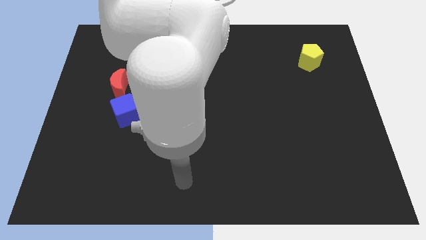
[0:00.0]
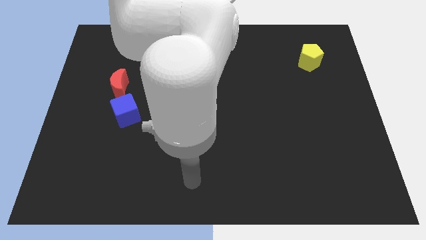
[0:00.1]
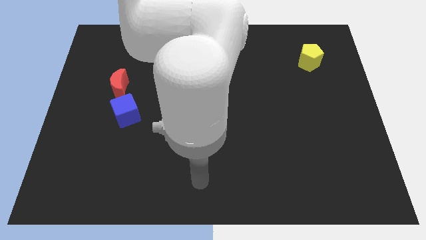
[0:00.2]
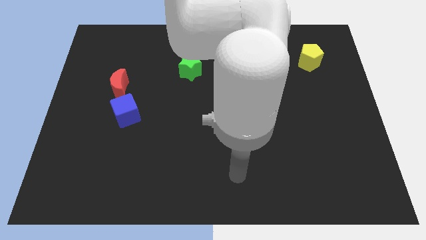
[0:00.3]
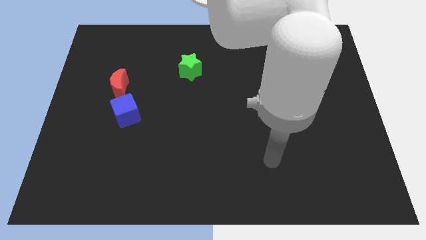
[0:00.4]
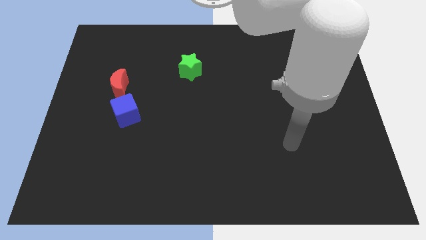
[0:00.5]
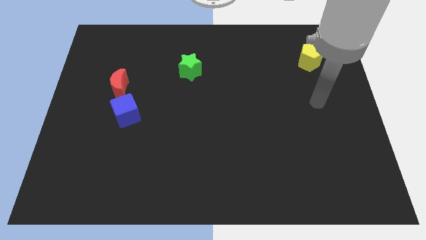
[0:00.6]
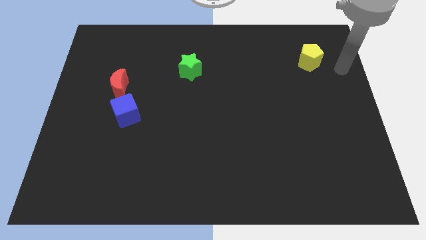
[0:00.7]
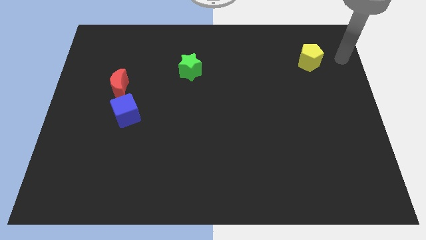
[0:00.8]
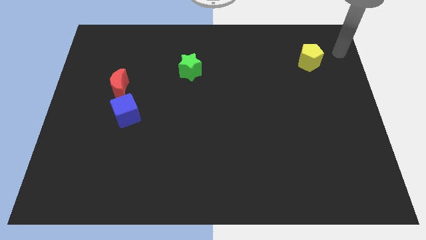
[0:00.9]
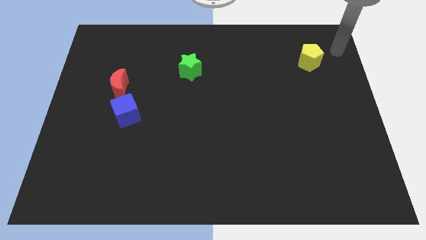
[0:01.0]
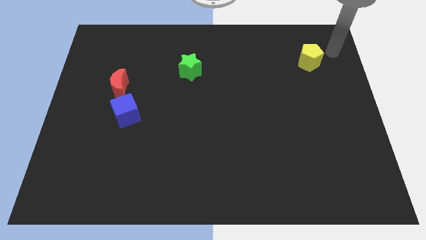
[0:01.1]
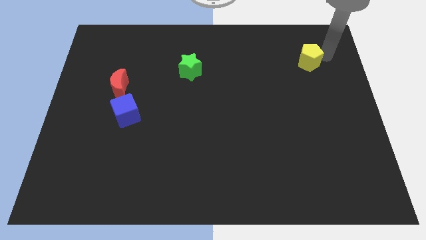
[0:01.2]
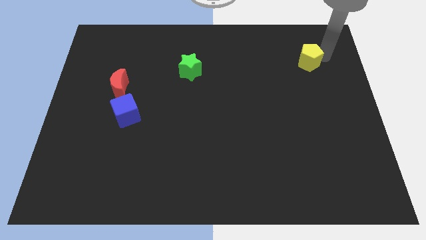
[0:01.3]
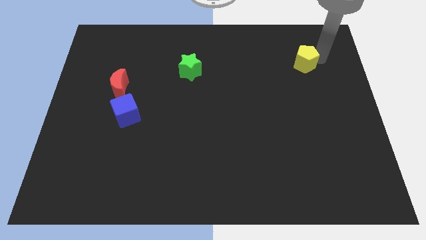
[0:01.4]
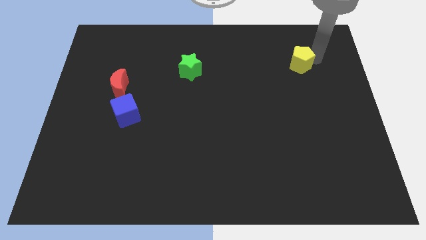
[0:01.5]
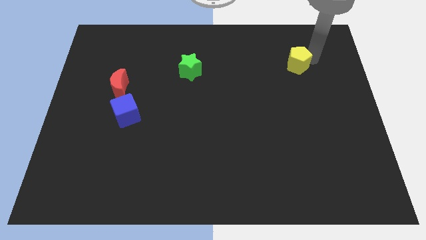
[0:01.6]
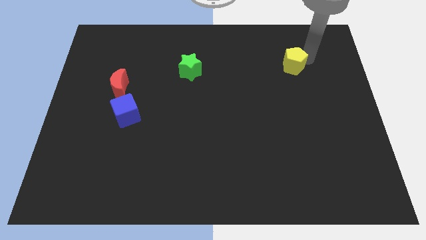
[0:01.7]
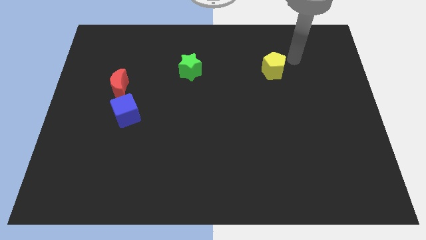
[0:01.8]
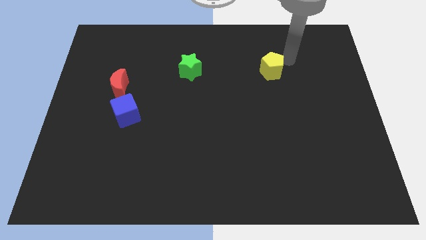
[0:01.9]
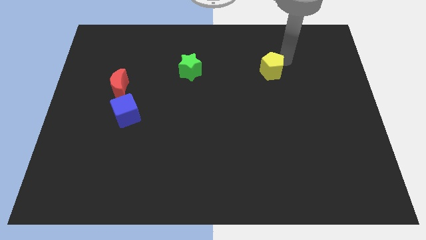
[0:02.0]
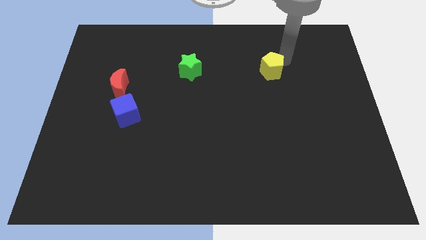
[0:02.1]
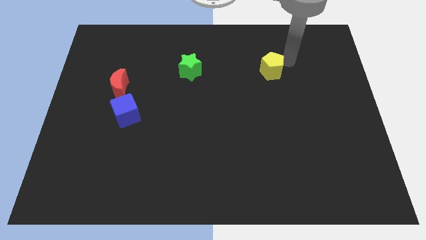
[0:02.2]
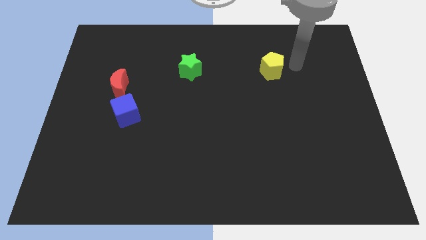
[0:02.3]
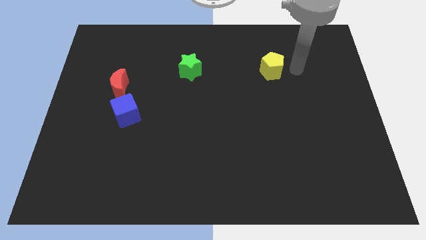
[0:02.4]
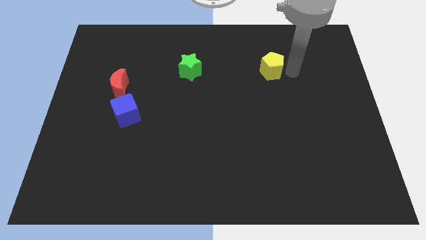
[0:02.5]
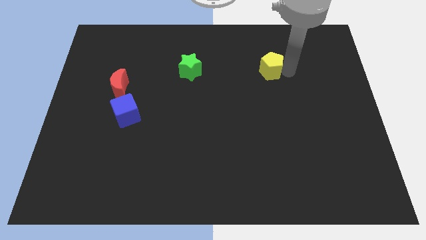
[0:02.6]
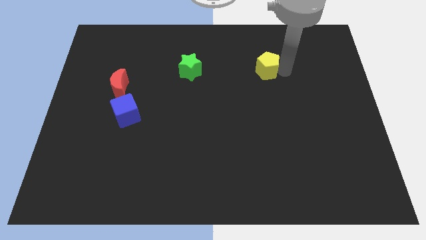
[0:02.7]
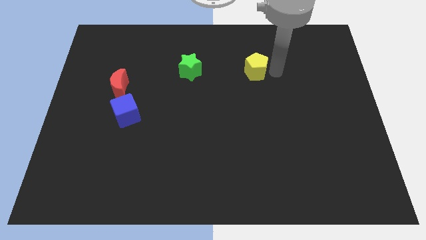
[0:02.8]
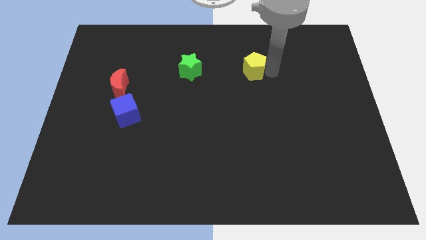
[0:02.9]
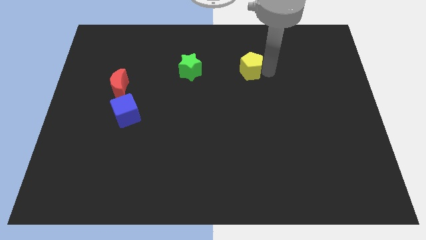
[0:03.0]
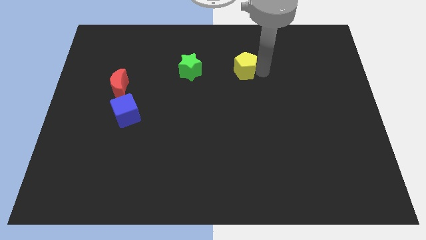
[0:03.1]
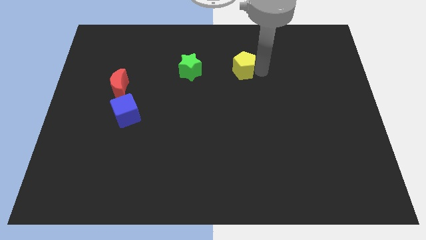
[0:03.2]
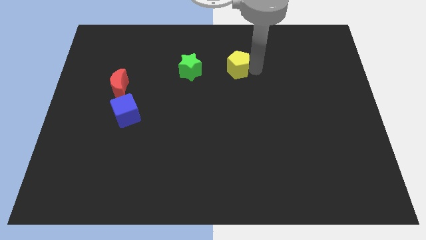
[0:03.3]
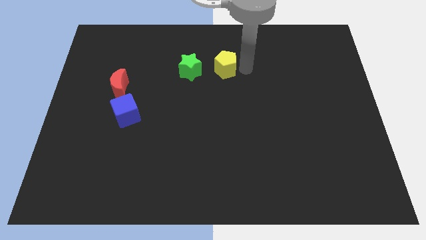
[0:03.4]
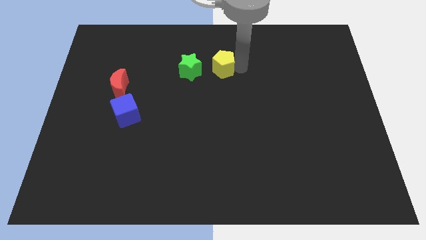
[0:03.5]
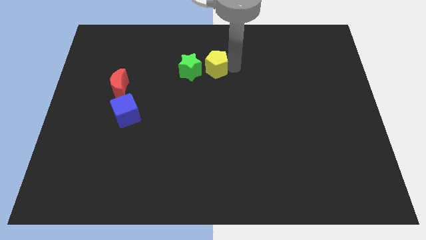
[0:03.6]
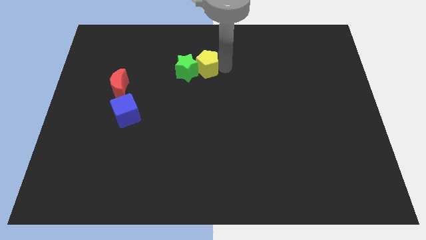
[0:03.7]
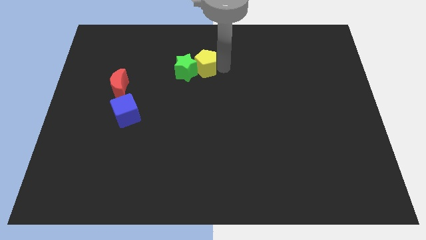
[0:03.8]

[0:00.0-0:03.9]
put the yellow pentagon to the green block

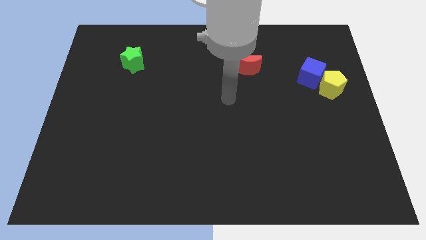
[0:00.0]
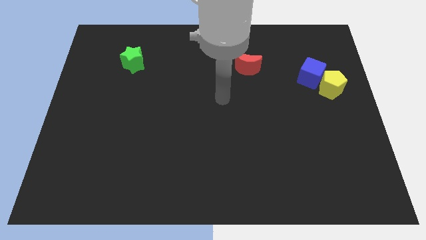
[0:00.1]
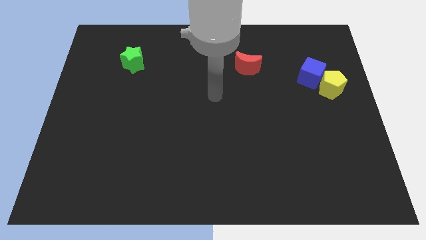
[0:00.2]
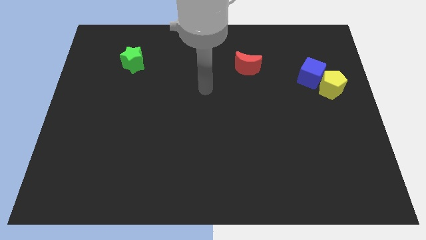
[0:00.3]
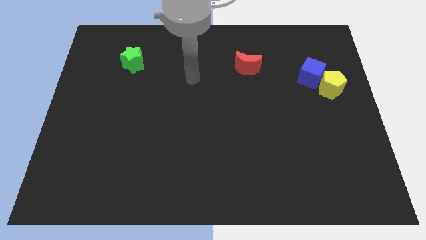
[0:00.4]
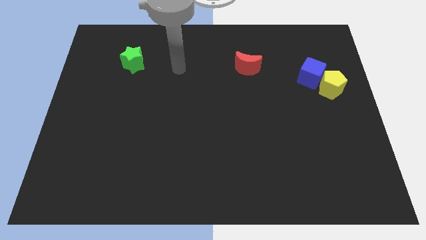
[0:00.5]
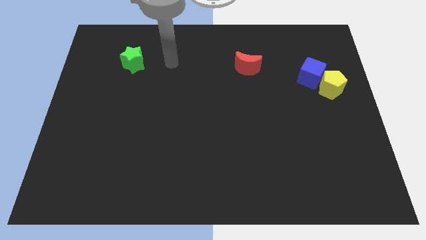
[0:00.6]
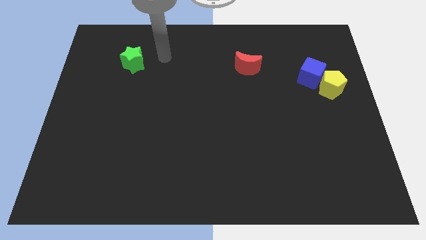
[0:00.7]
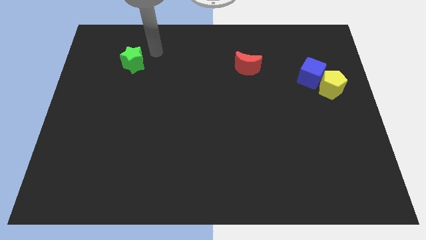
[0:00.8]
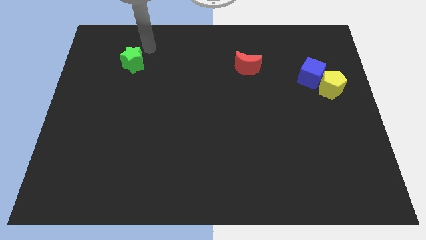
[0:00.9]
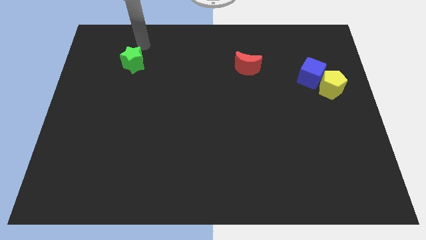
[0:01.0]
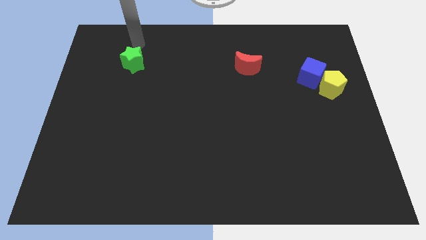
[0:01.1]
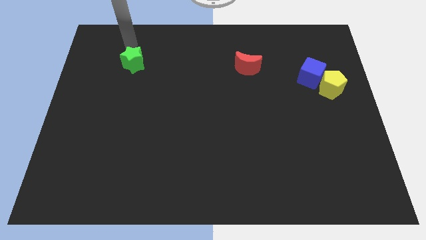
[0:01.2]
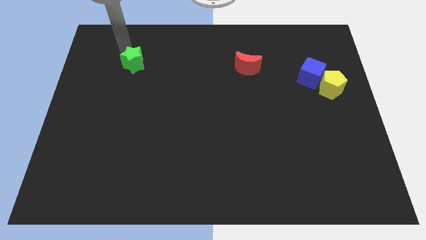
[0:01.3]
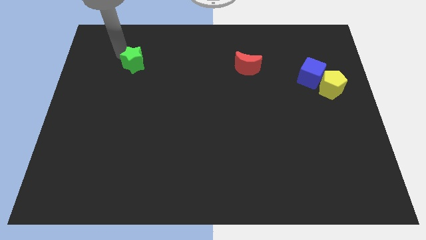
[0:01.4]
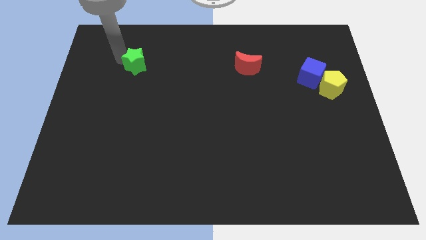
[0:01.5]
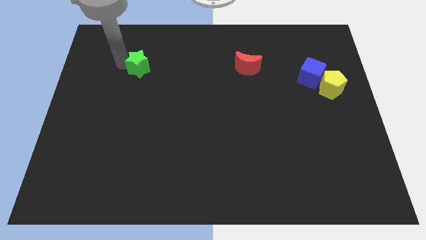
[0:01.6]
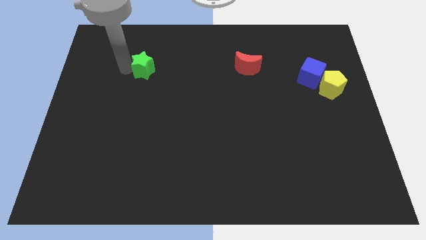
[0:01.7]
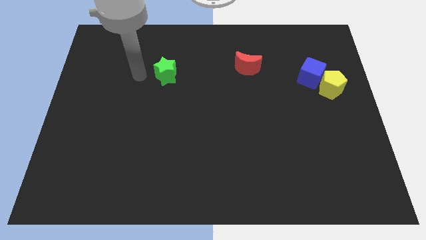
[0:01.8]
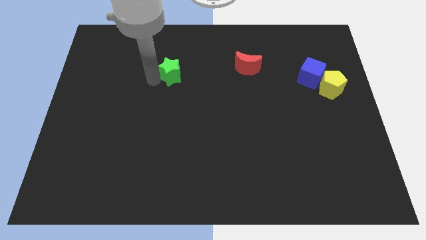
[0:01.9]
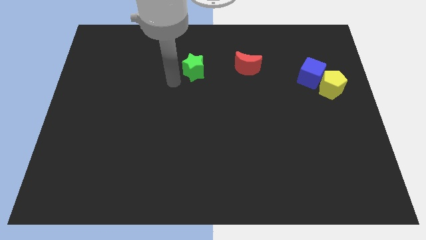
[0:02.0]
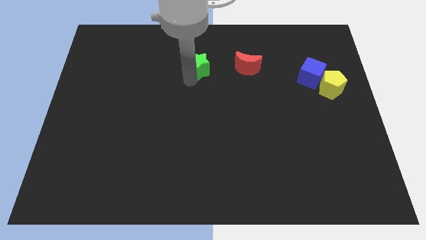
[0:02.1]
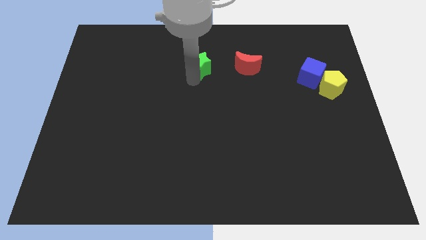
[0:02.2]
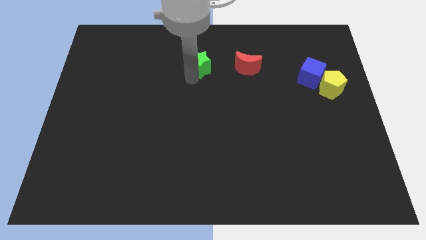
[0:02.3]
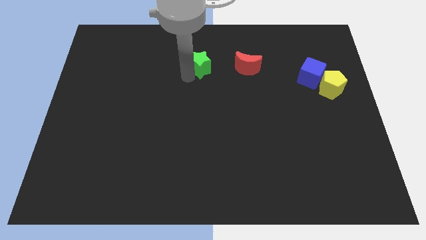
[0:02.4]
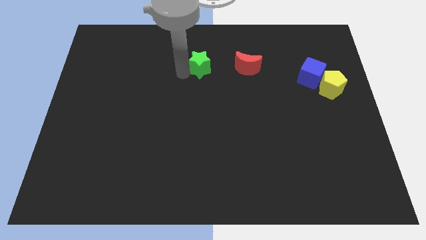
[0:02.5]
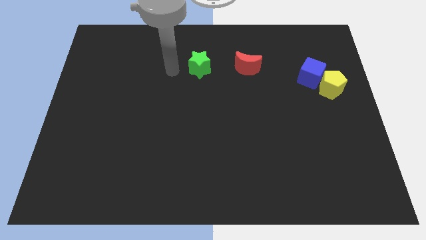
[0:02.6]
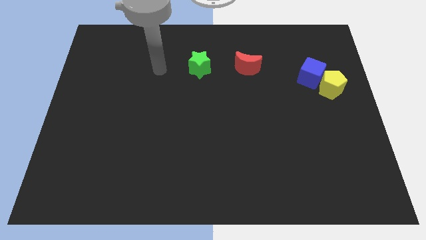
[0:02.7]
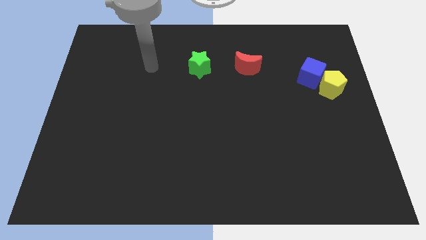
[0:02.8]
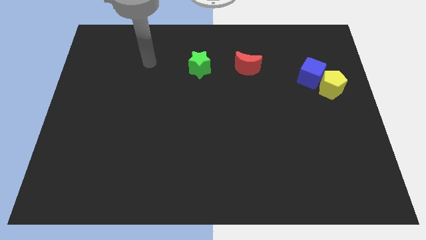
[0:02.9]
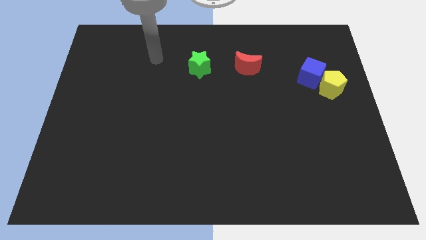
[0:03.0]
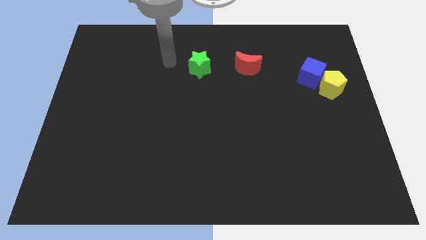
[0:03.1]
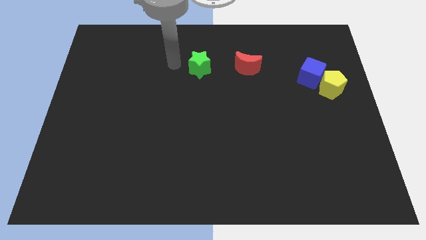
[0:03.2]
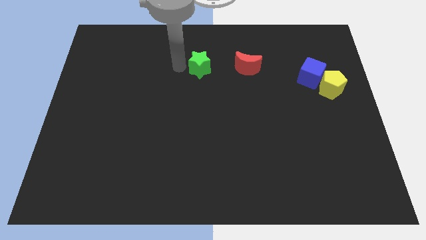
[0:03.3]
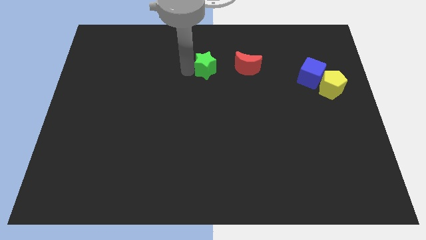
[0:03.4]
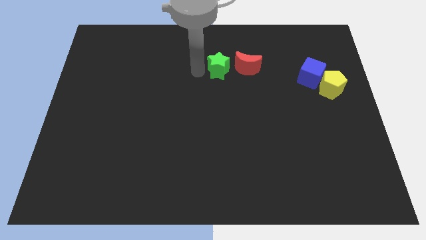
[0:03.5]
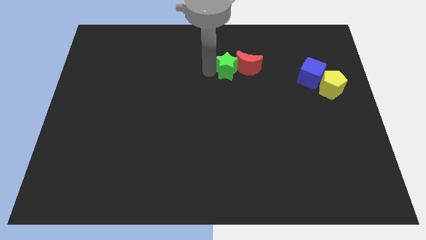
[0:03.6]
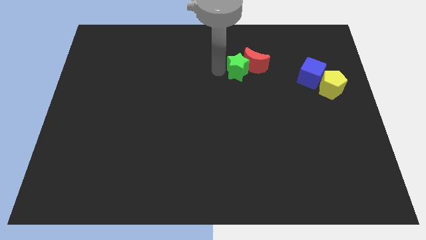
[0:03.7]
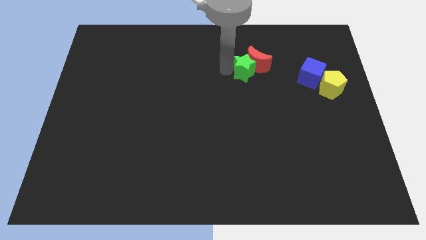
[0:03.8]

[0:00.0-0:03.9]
push the green block next to the red block

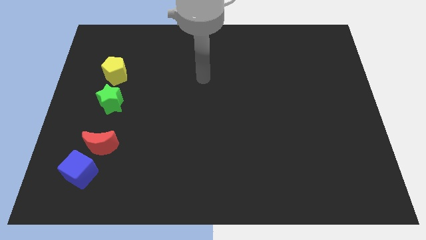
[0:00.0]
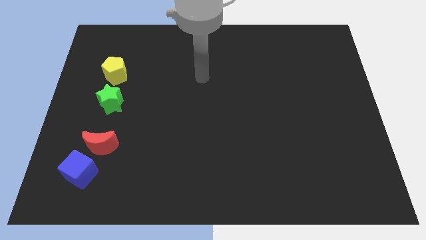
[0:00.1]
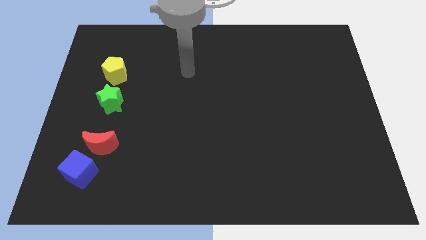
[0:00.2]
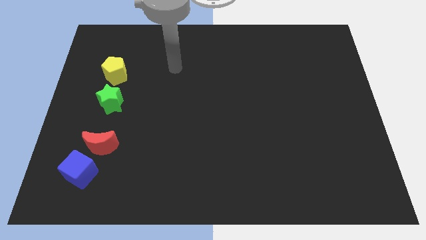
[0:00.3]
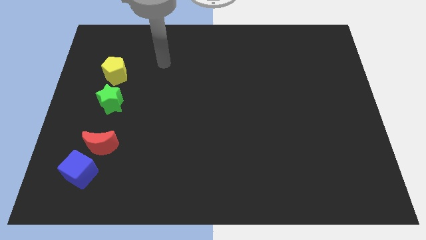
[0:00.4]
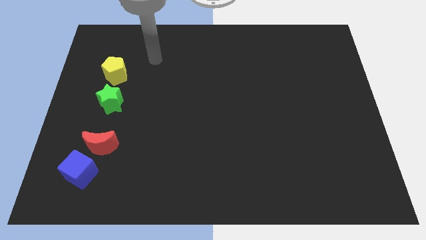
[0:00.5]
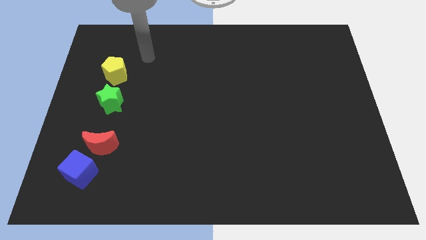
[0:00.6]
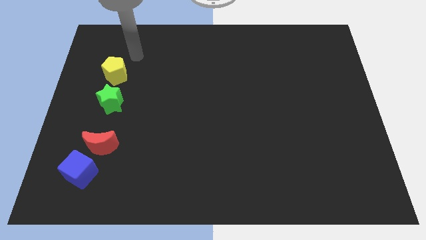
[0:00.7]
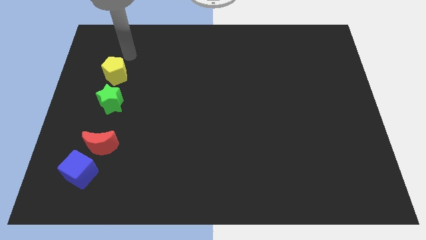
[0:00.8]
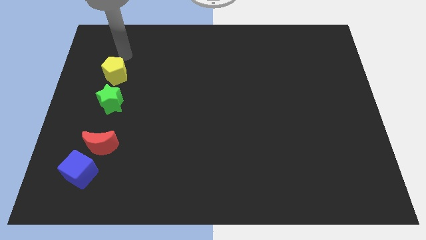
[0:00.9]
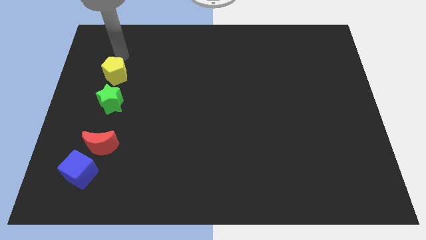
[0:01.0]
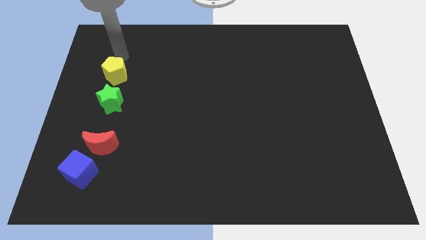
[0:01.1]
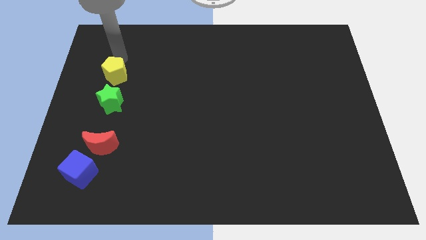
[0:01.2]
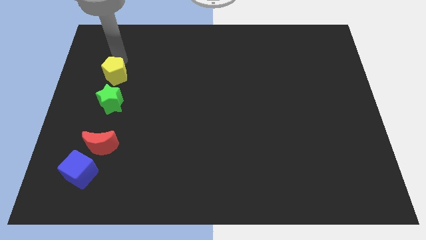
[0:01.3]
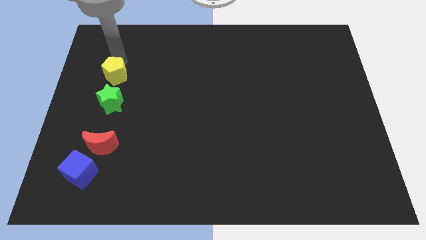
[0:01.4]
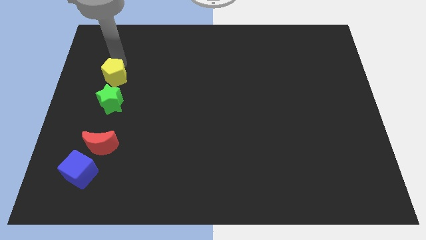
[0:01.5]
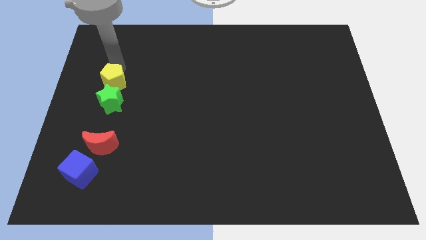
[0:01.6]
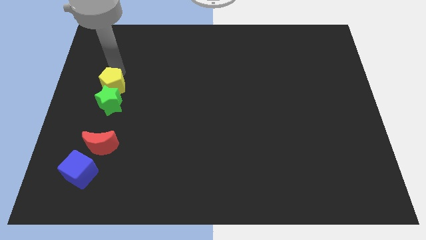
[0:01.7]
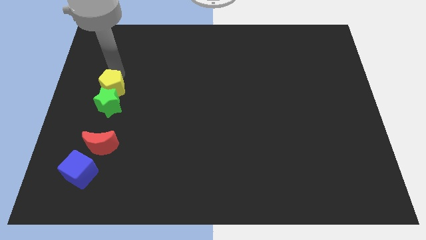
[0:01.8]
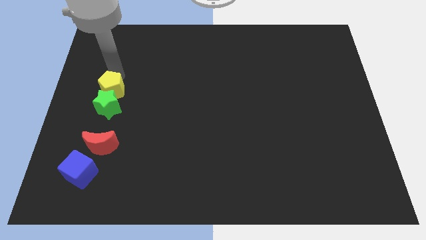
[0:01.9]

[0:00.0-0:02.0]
put the yellow block to the green star
